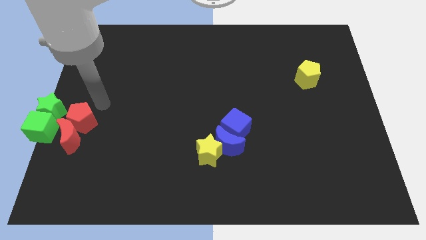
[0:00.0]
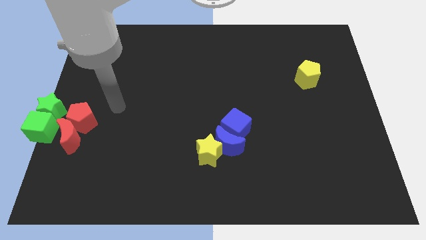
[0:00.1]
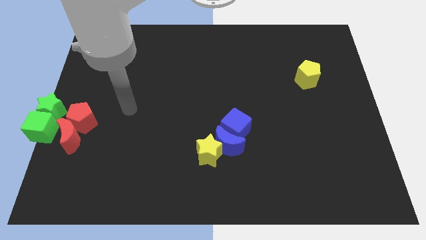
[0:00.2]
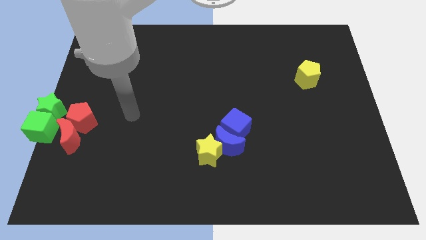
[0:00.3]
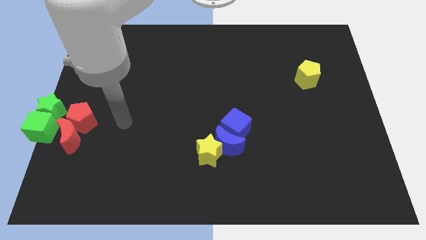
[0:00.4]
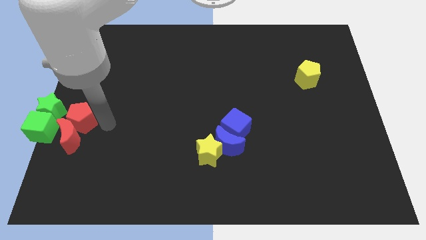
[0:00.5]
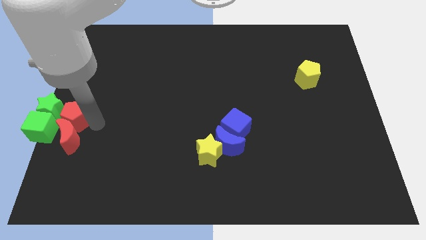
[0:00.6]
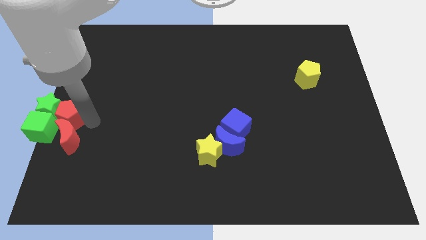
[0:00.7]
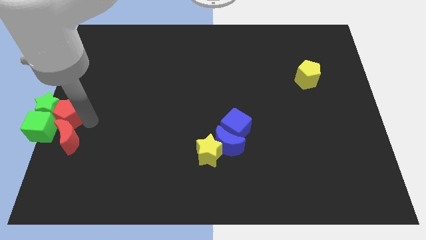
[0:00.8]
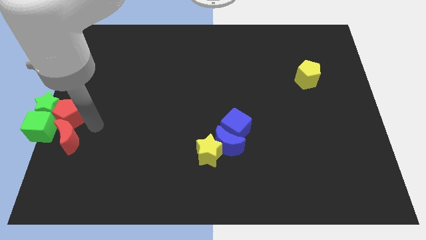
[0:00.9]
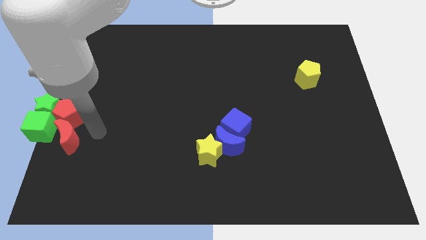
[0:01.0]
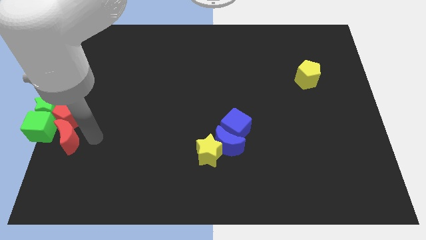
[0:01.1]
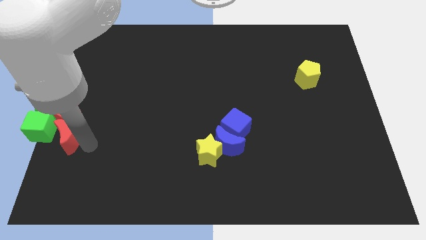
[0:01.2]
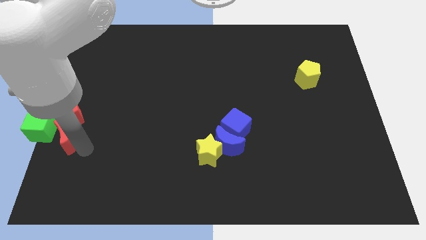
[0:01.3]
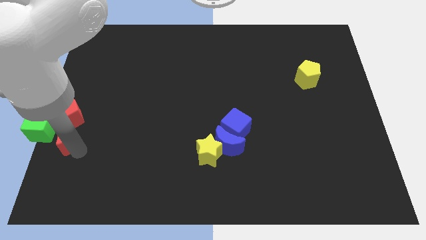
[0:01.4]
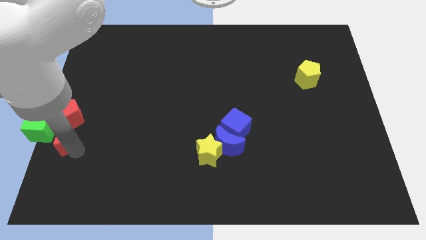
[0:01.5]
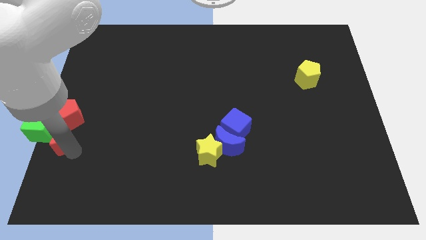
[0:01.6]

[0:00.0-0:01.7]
move red blocks close to green blocks

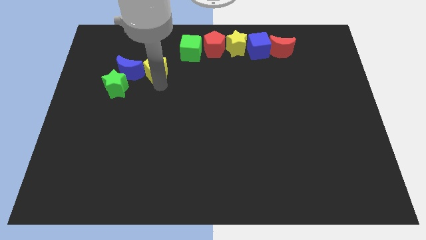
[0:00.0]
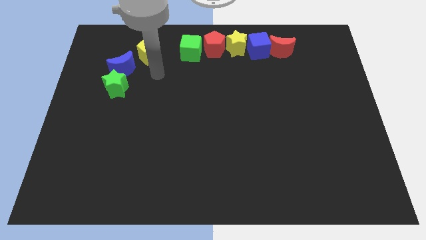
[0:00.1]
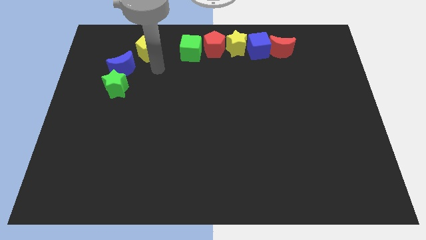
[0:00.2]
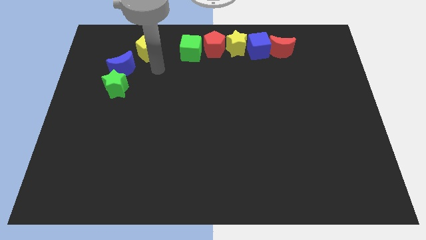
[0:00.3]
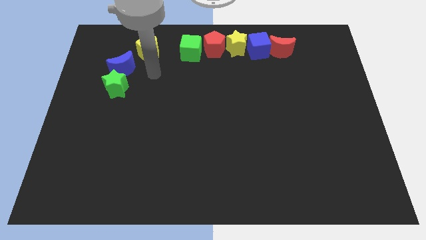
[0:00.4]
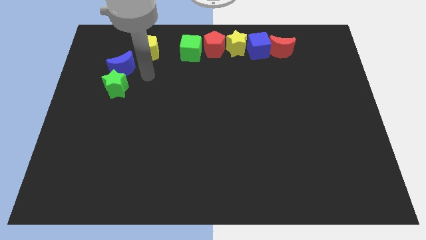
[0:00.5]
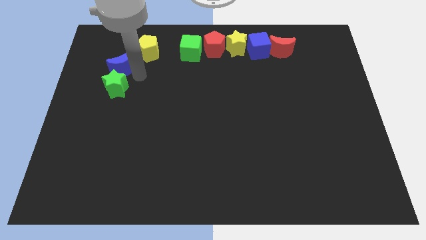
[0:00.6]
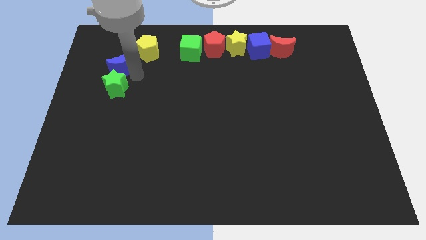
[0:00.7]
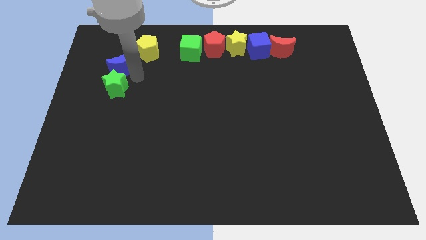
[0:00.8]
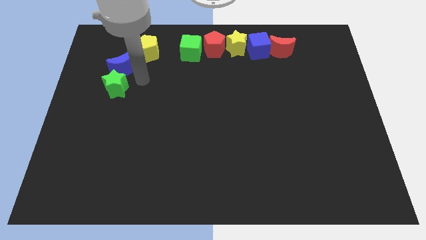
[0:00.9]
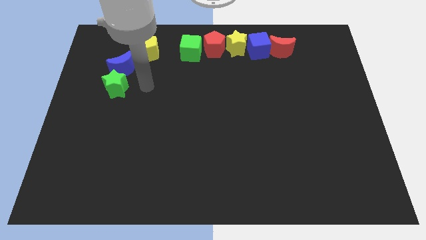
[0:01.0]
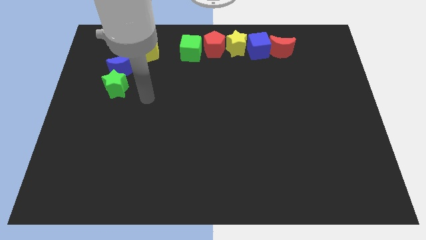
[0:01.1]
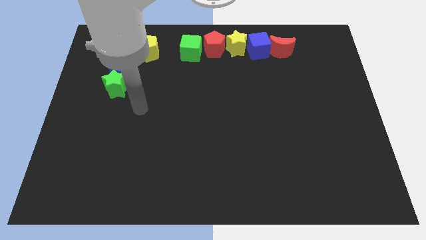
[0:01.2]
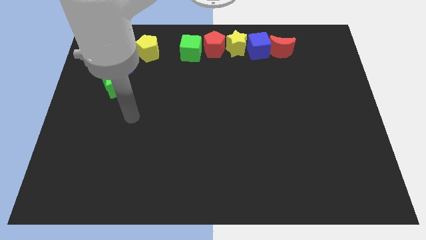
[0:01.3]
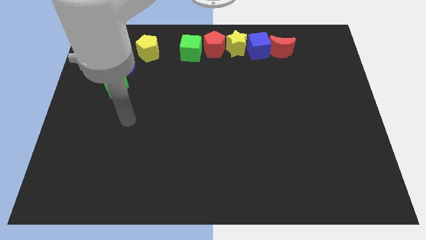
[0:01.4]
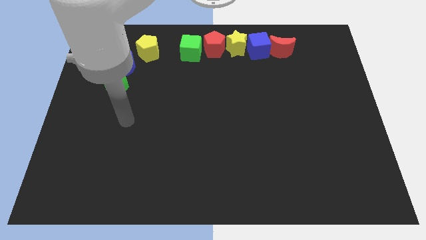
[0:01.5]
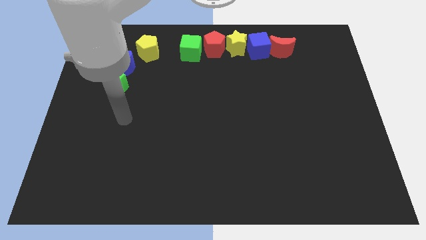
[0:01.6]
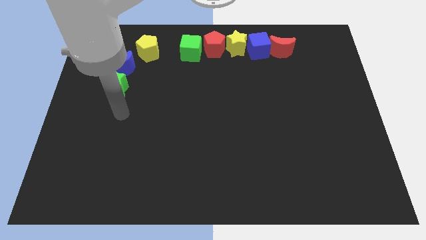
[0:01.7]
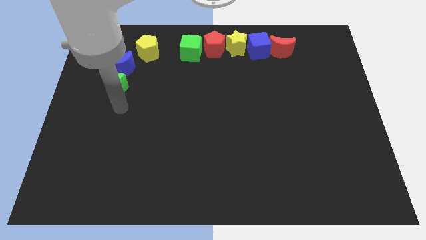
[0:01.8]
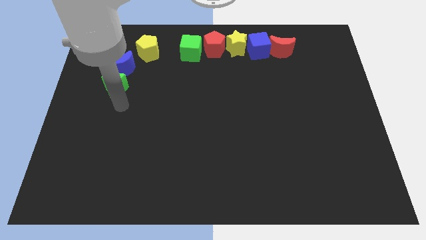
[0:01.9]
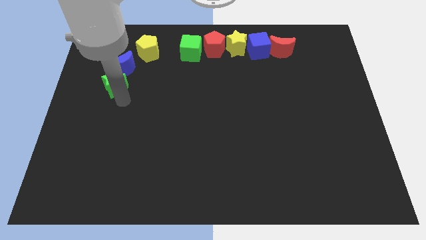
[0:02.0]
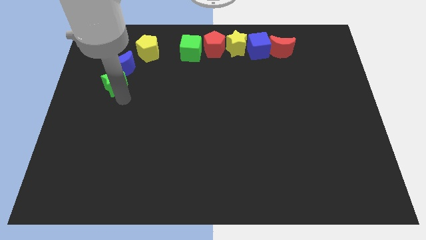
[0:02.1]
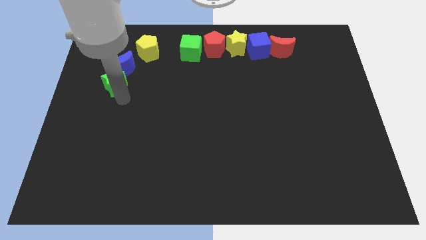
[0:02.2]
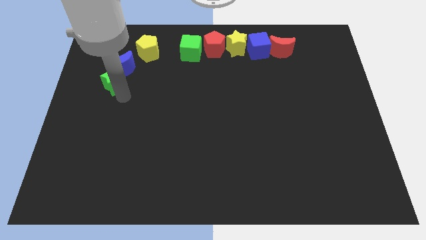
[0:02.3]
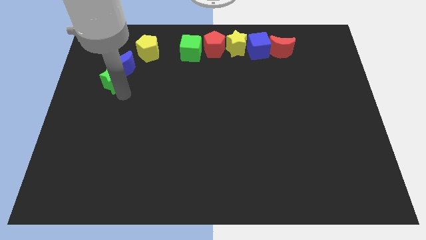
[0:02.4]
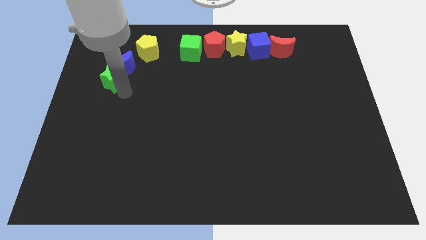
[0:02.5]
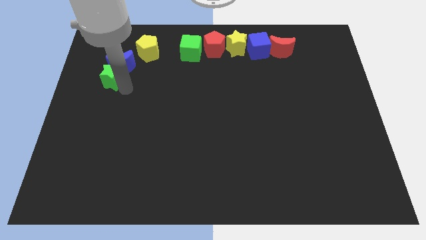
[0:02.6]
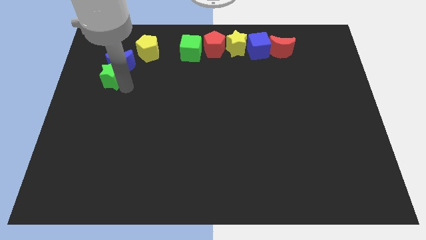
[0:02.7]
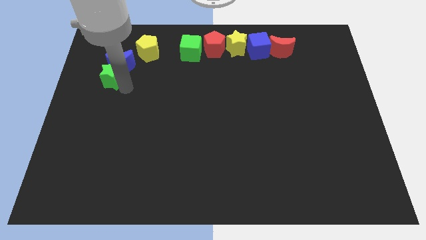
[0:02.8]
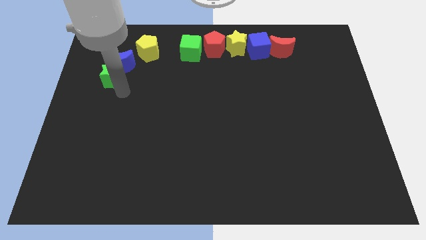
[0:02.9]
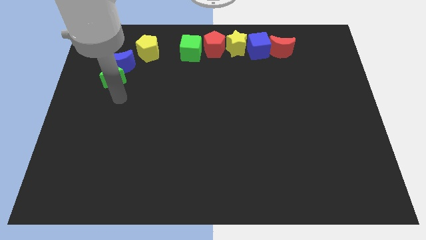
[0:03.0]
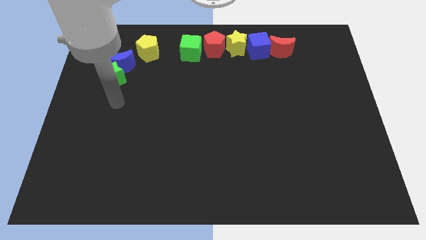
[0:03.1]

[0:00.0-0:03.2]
move your arm to the green star

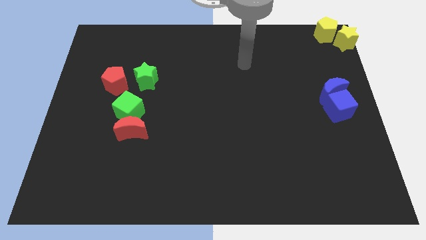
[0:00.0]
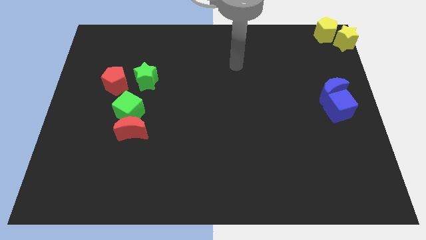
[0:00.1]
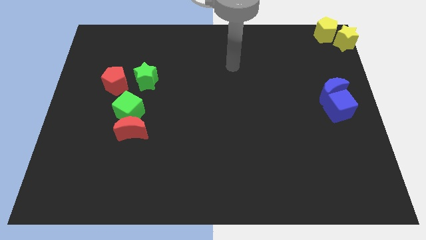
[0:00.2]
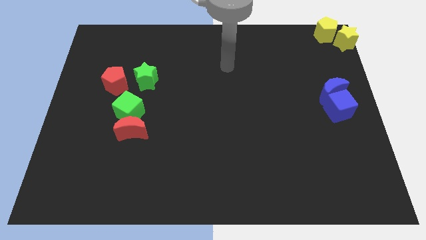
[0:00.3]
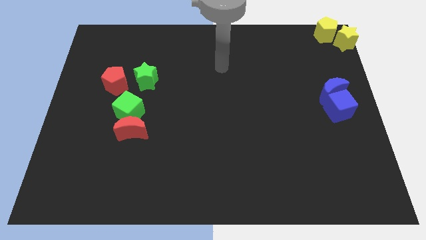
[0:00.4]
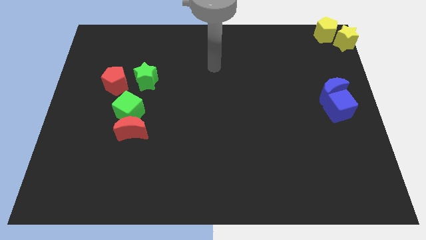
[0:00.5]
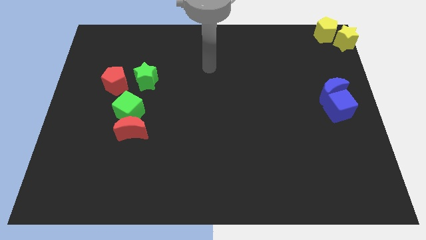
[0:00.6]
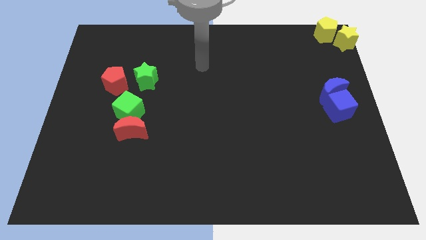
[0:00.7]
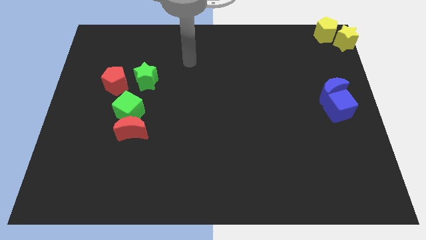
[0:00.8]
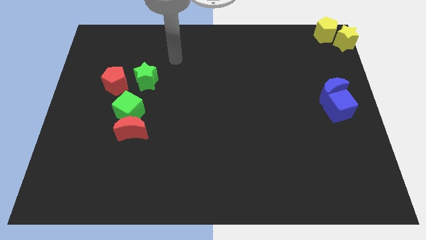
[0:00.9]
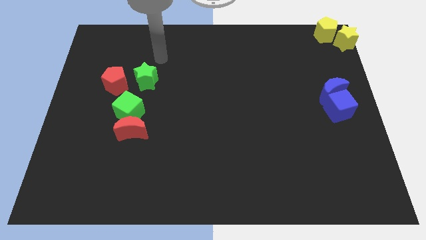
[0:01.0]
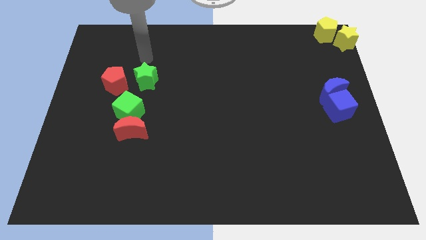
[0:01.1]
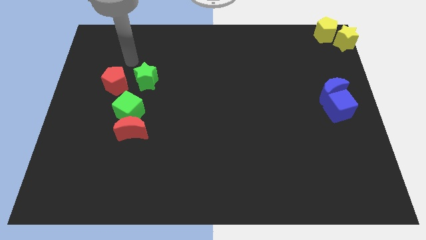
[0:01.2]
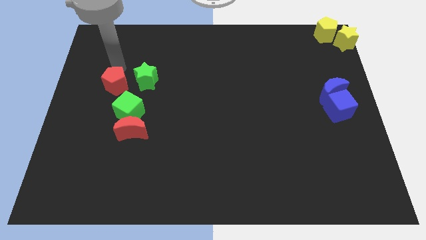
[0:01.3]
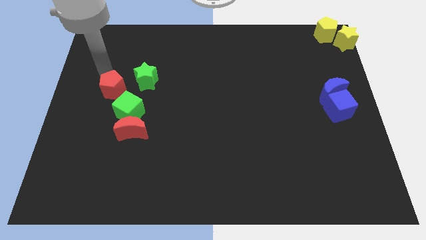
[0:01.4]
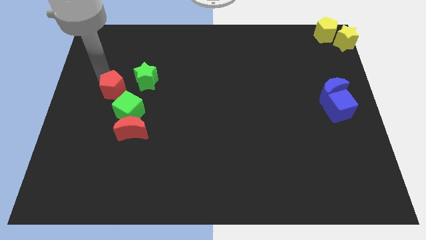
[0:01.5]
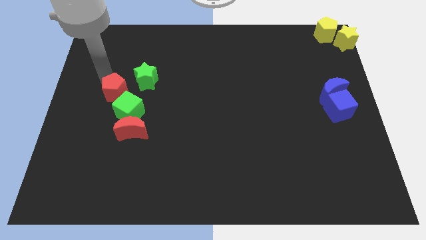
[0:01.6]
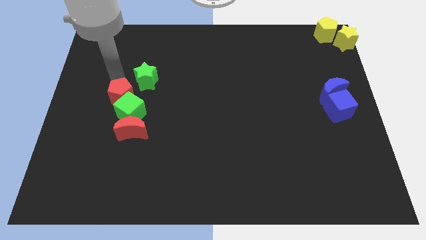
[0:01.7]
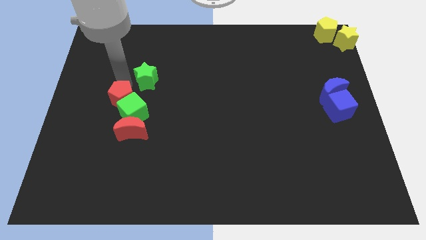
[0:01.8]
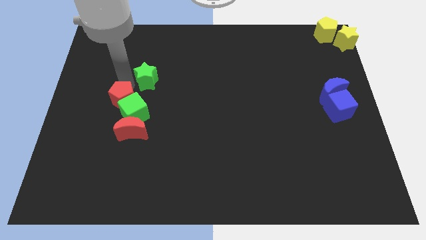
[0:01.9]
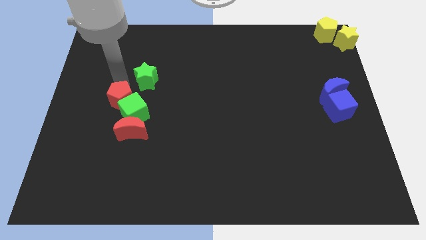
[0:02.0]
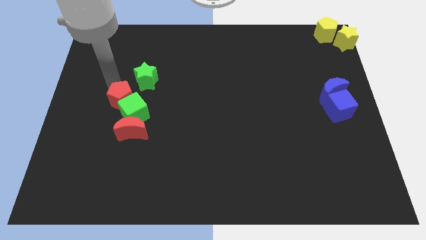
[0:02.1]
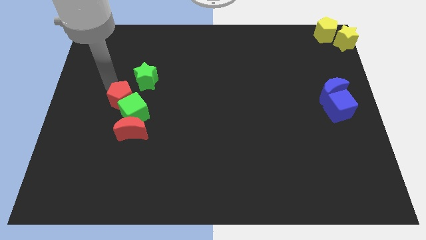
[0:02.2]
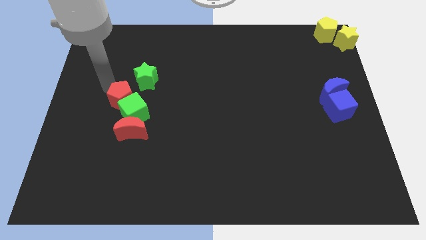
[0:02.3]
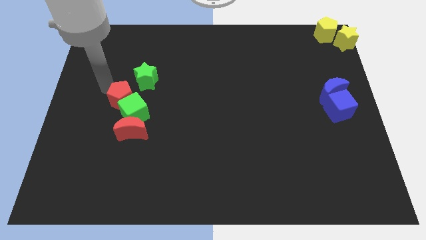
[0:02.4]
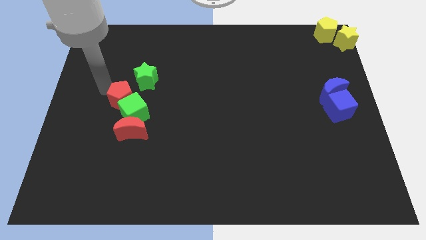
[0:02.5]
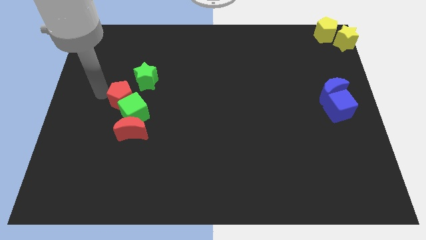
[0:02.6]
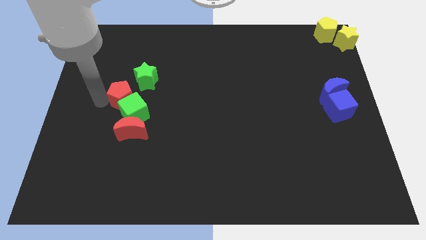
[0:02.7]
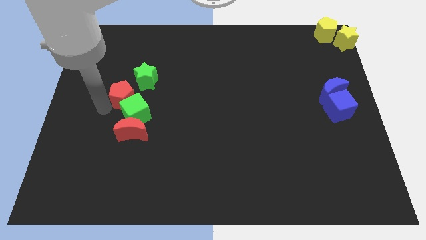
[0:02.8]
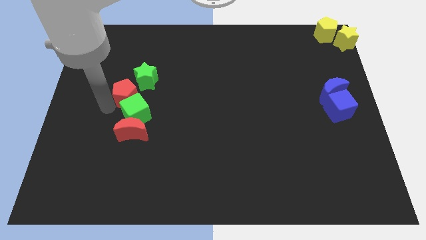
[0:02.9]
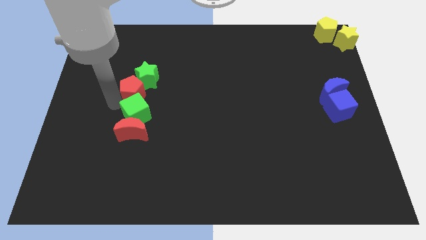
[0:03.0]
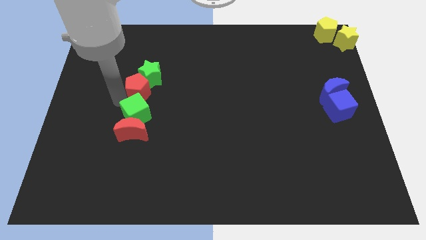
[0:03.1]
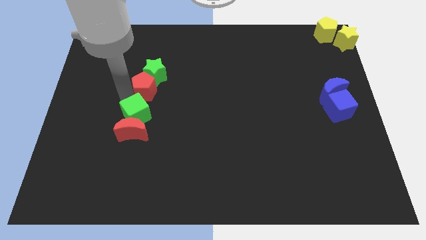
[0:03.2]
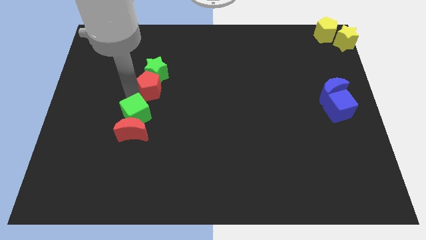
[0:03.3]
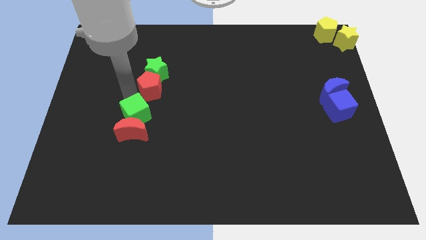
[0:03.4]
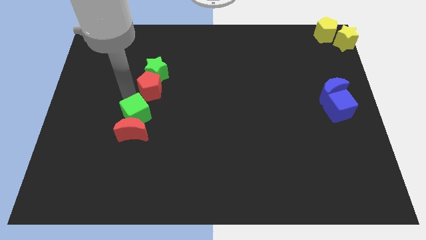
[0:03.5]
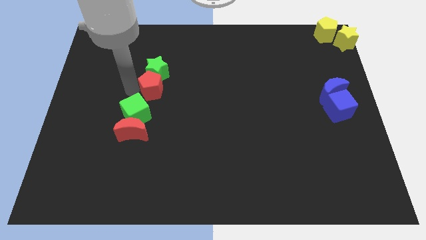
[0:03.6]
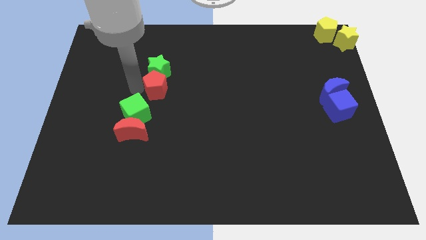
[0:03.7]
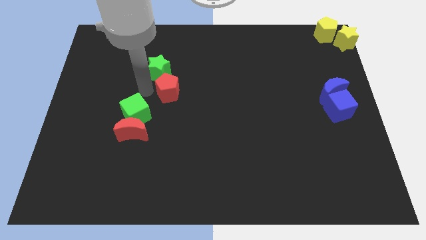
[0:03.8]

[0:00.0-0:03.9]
slightly move the red pentagon towards the right
